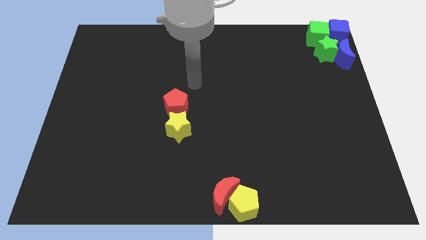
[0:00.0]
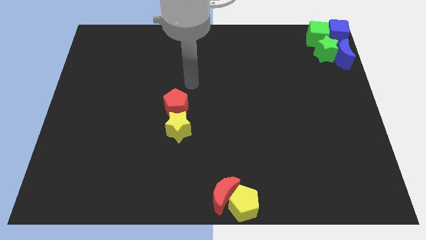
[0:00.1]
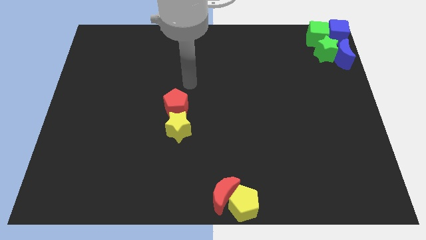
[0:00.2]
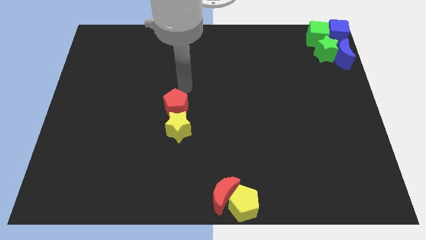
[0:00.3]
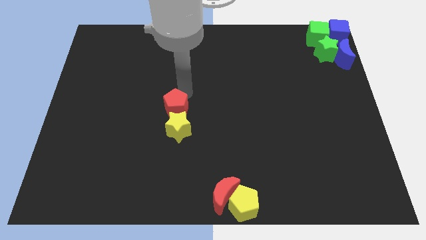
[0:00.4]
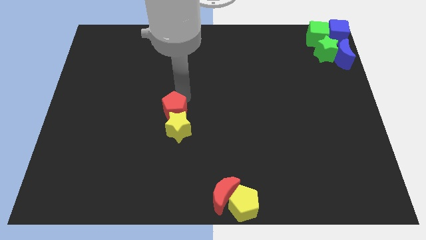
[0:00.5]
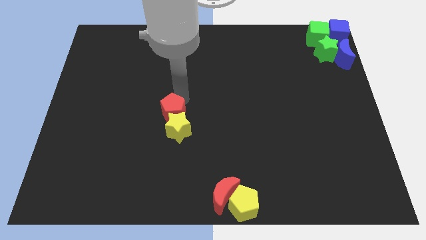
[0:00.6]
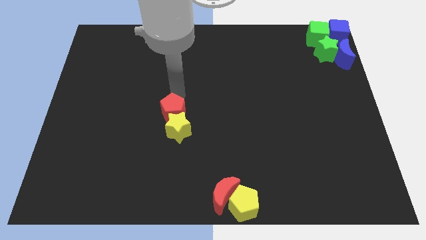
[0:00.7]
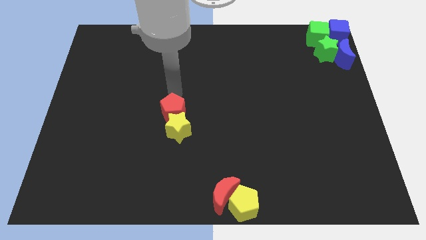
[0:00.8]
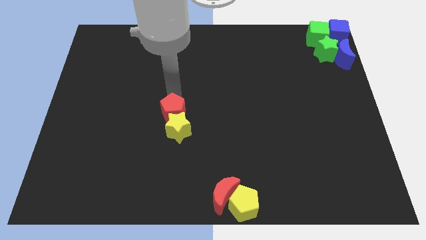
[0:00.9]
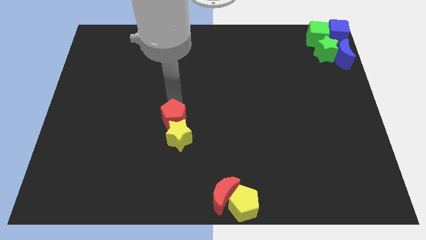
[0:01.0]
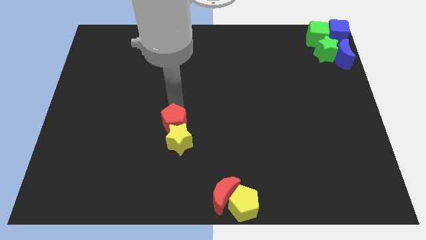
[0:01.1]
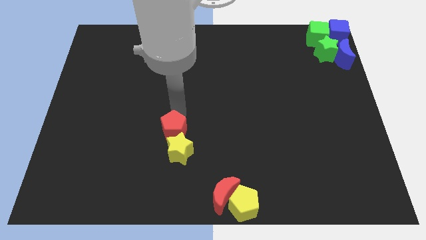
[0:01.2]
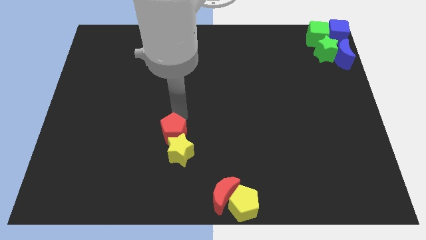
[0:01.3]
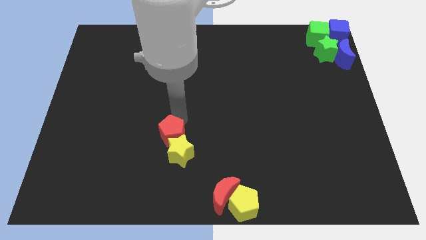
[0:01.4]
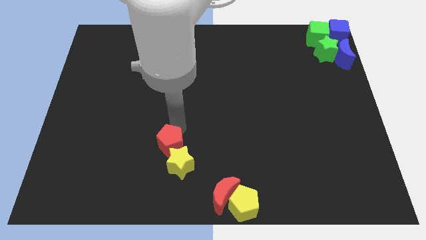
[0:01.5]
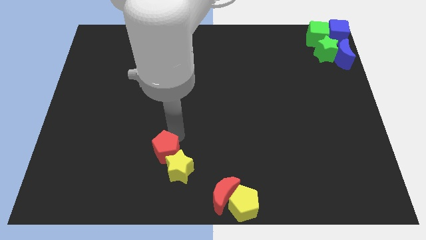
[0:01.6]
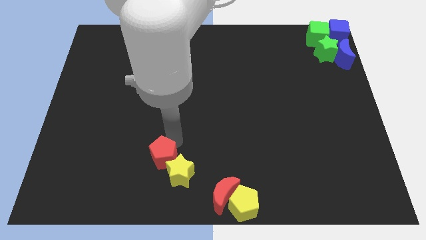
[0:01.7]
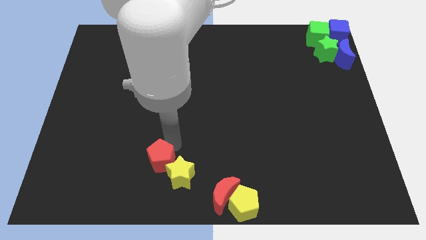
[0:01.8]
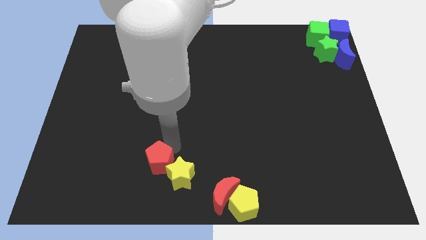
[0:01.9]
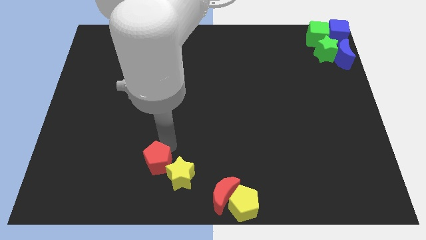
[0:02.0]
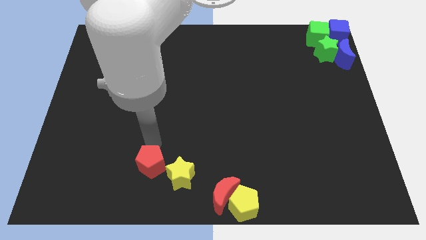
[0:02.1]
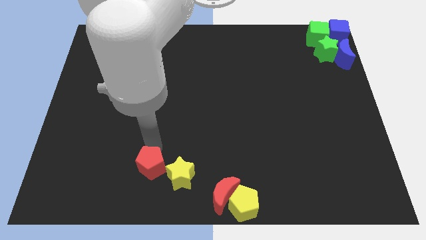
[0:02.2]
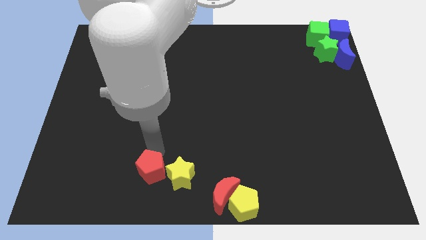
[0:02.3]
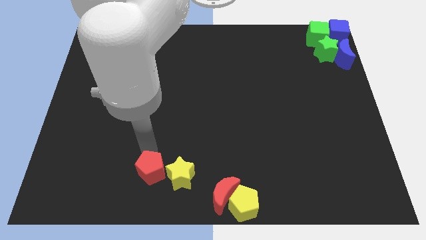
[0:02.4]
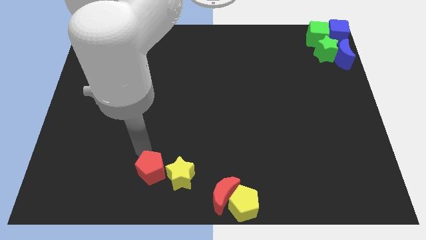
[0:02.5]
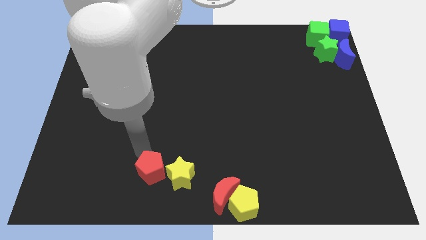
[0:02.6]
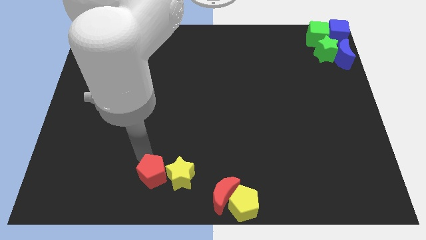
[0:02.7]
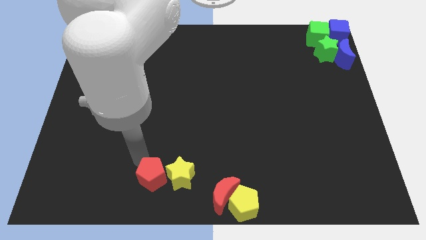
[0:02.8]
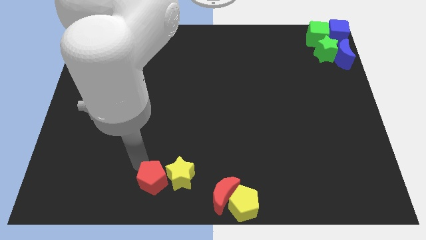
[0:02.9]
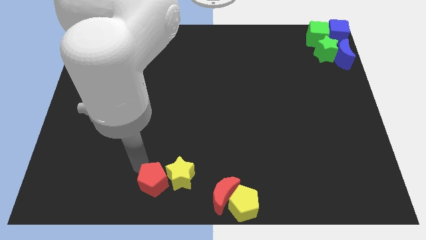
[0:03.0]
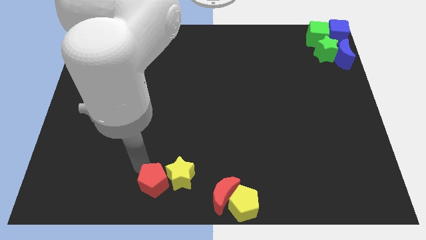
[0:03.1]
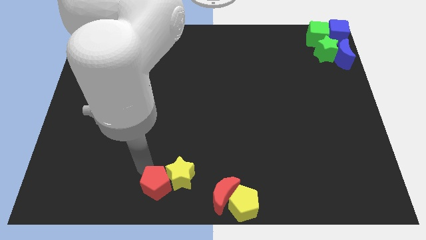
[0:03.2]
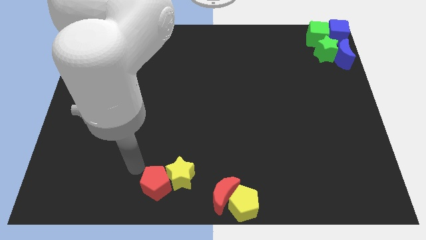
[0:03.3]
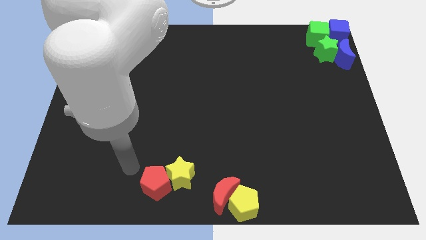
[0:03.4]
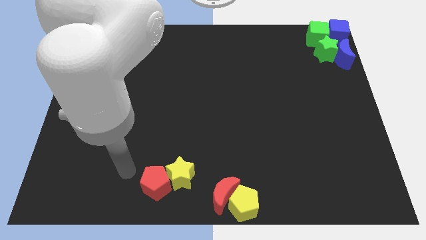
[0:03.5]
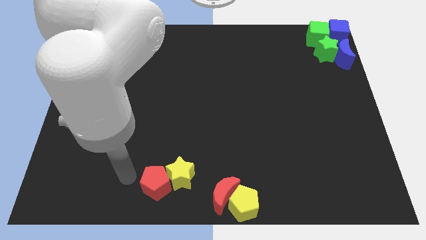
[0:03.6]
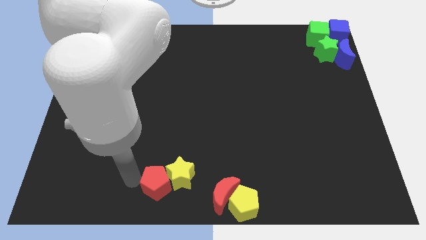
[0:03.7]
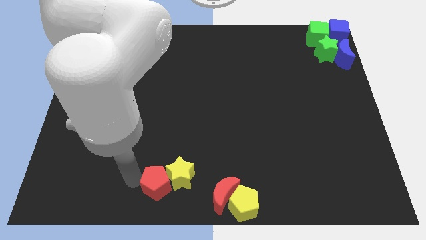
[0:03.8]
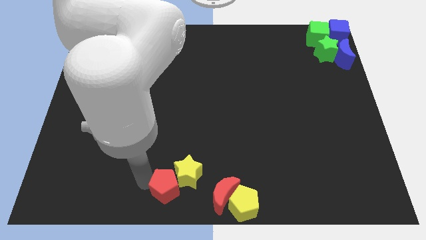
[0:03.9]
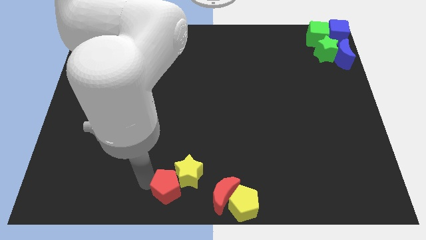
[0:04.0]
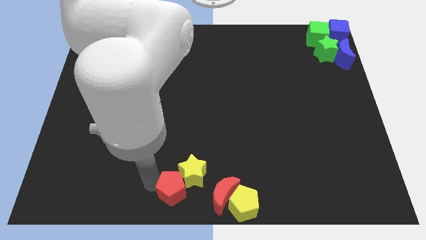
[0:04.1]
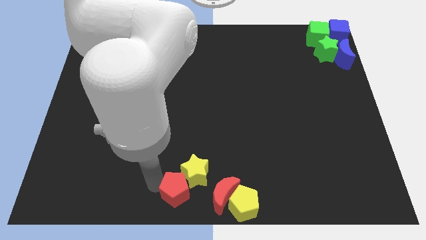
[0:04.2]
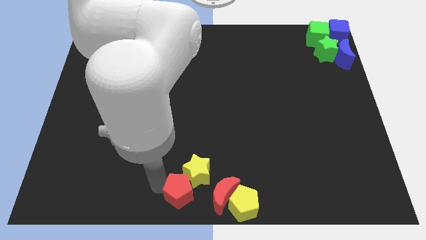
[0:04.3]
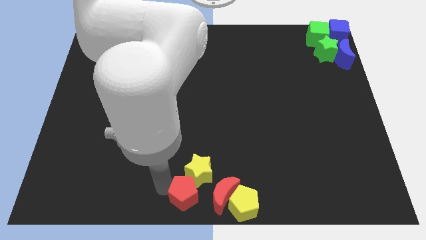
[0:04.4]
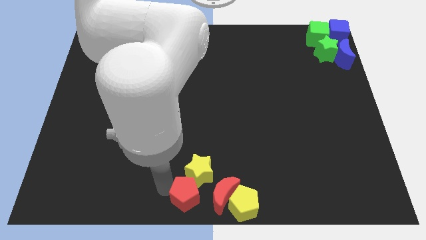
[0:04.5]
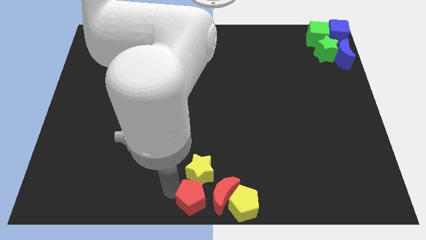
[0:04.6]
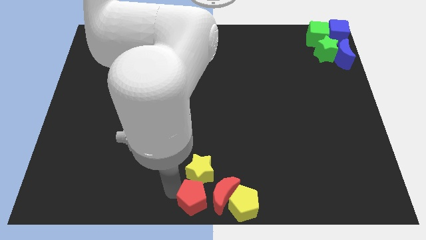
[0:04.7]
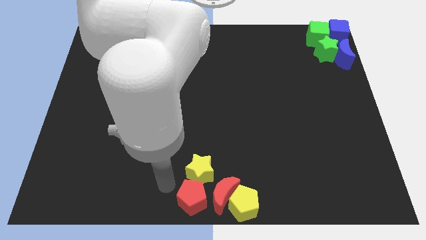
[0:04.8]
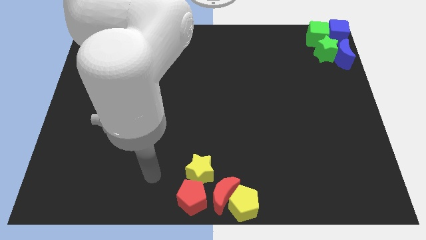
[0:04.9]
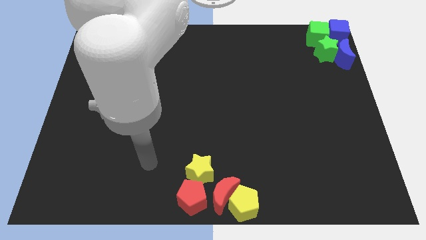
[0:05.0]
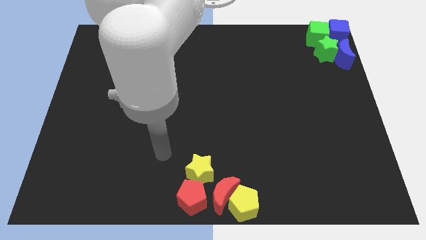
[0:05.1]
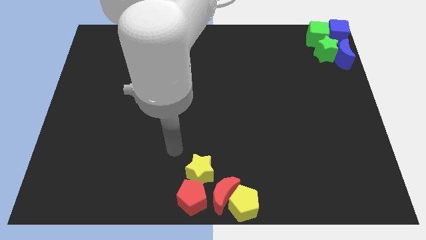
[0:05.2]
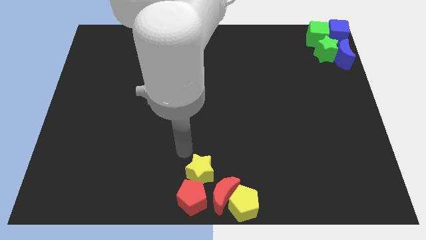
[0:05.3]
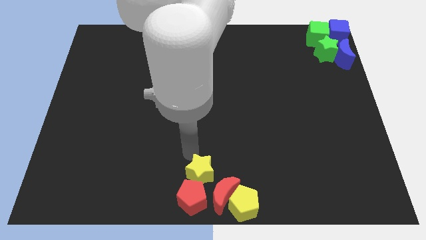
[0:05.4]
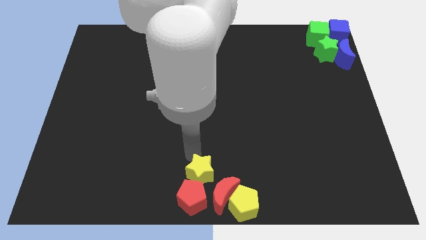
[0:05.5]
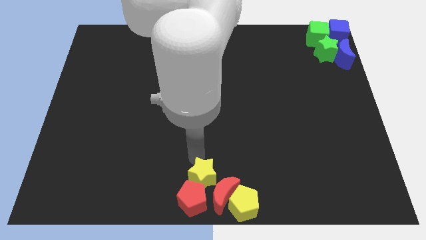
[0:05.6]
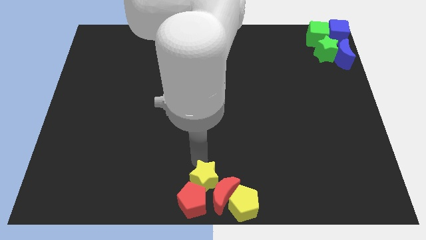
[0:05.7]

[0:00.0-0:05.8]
push the red and yellow blocks to the bottom center of the board

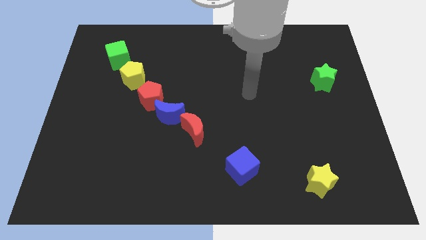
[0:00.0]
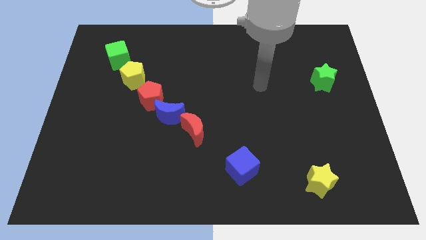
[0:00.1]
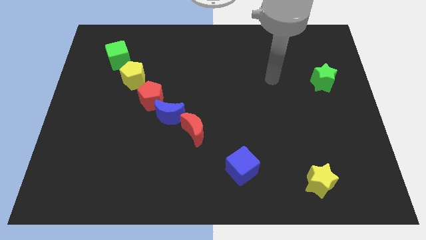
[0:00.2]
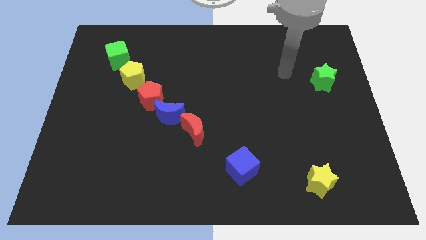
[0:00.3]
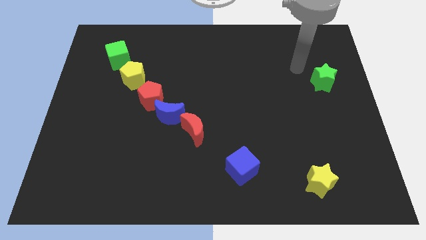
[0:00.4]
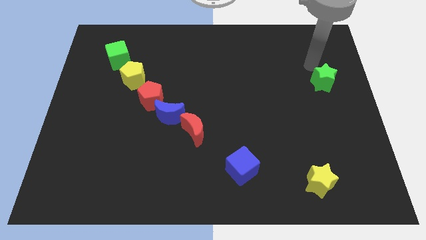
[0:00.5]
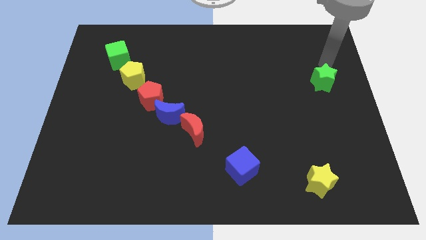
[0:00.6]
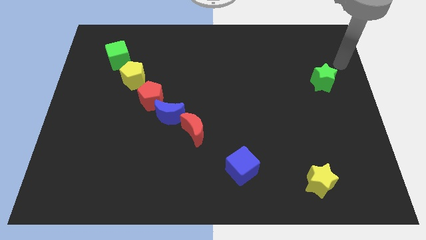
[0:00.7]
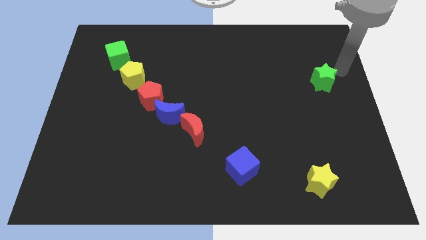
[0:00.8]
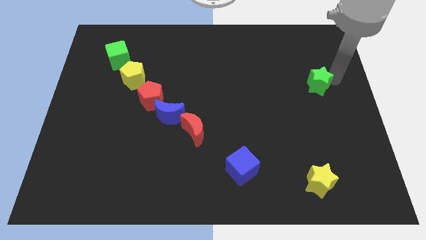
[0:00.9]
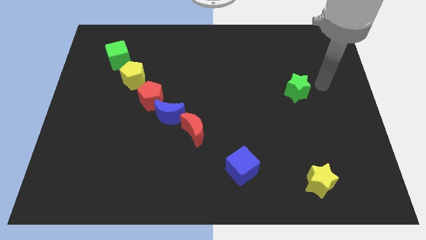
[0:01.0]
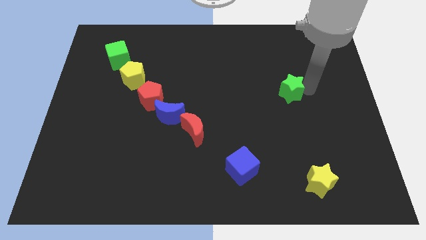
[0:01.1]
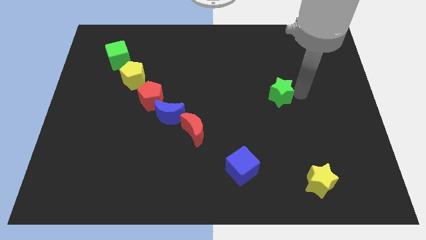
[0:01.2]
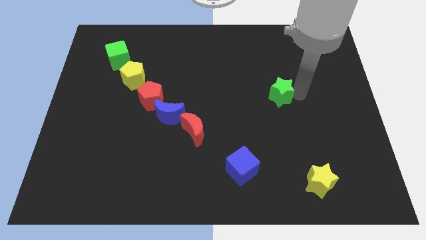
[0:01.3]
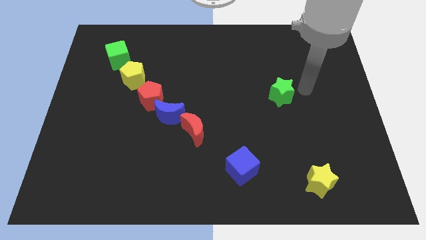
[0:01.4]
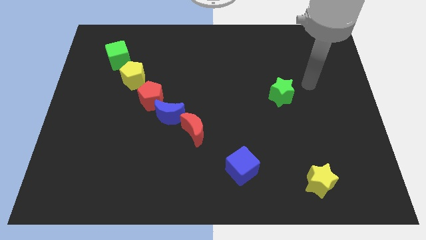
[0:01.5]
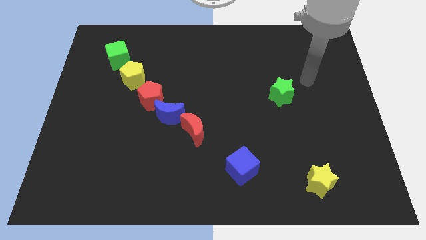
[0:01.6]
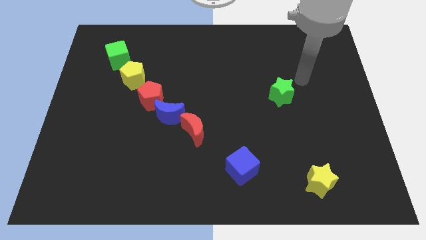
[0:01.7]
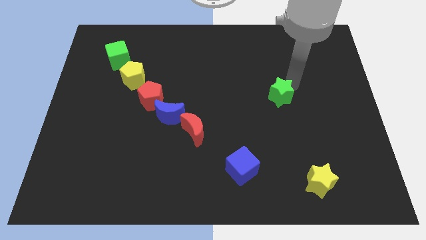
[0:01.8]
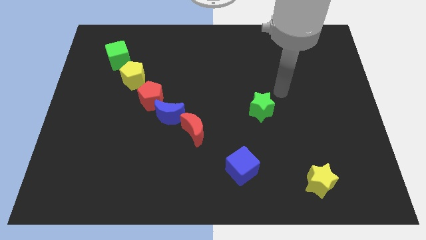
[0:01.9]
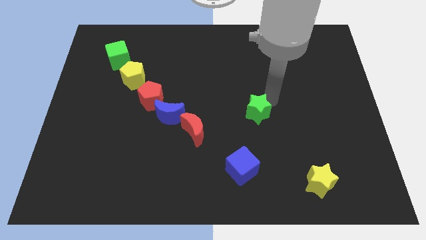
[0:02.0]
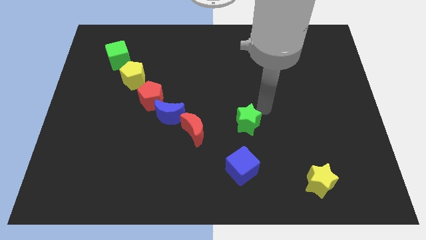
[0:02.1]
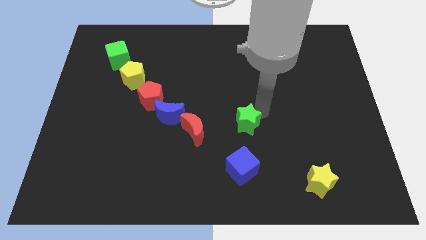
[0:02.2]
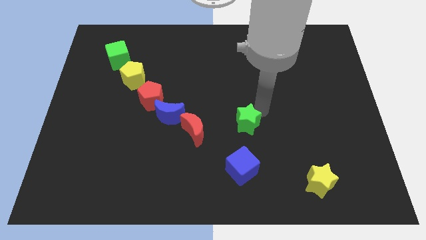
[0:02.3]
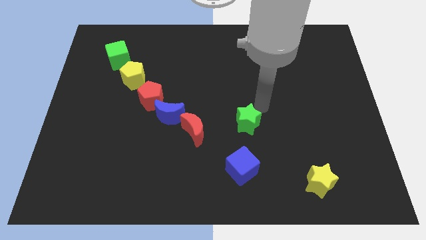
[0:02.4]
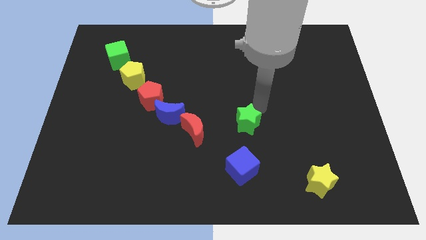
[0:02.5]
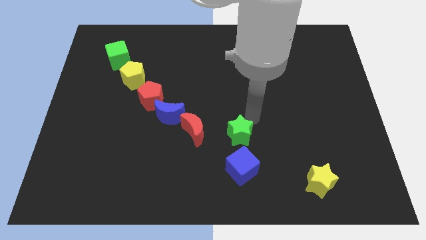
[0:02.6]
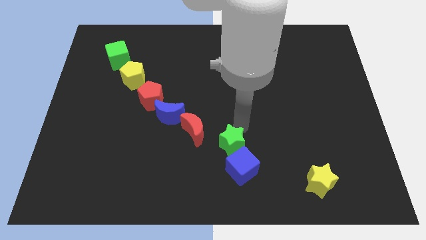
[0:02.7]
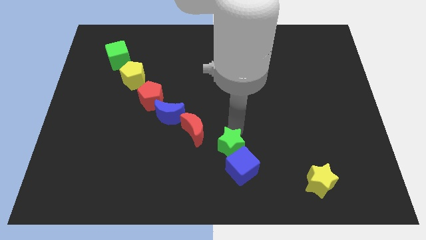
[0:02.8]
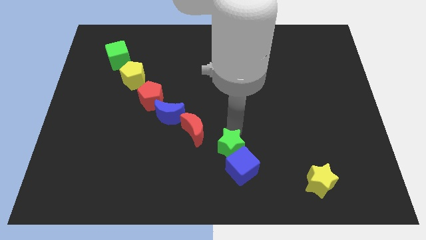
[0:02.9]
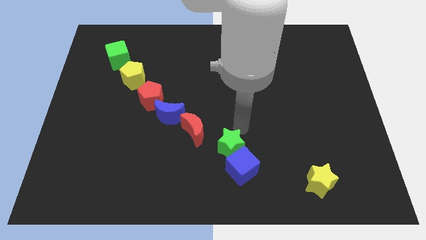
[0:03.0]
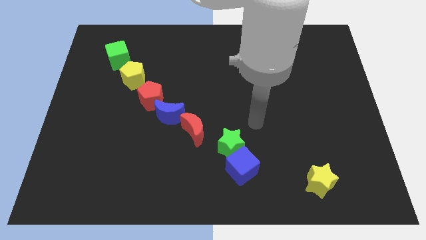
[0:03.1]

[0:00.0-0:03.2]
place the green star to the top of the blue cube
